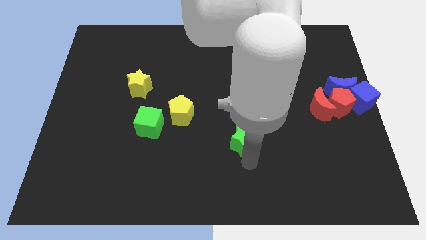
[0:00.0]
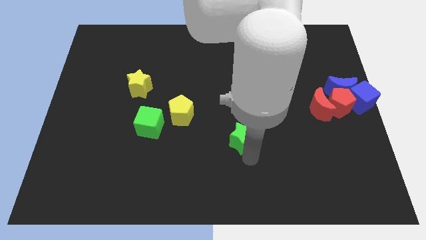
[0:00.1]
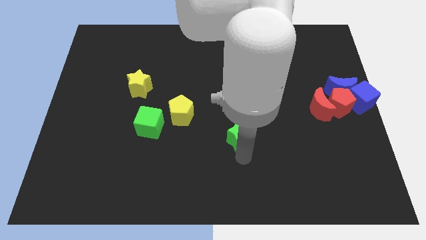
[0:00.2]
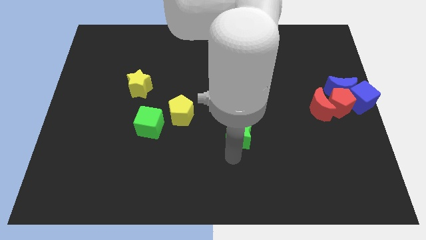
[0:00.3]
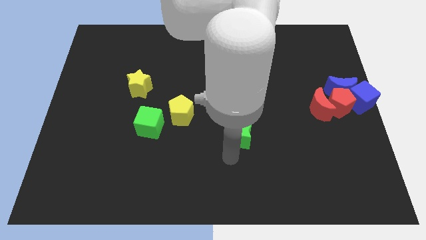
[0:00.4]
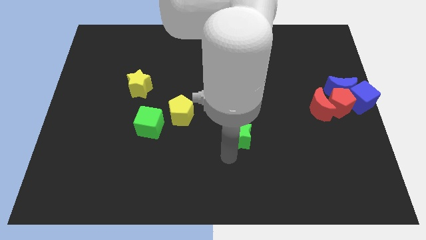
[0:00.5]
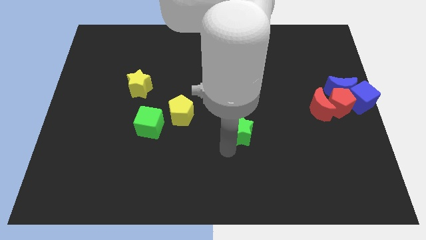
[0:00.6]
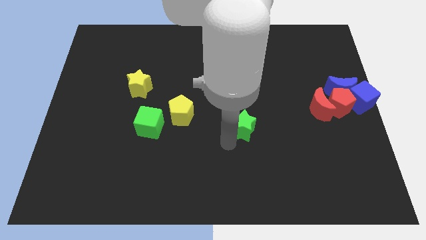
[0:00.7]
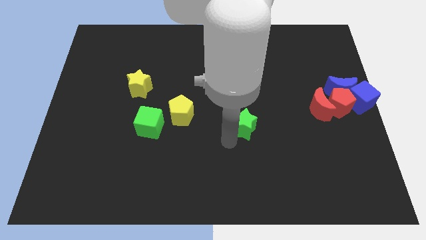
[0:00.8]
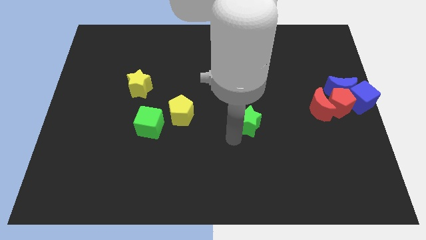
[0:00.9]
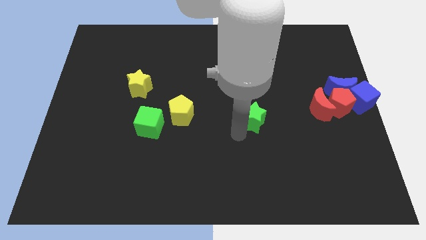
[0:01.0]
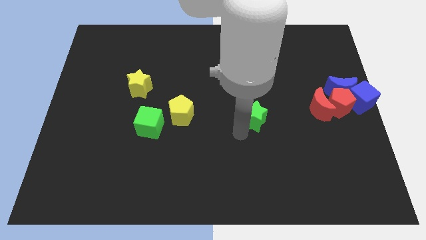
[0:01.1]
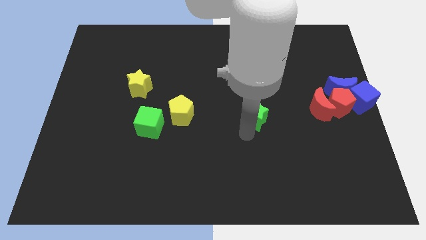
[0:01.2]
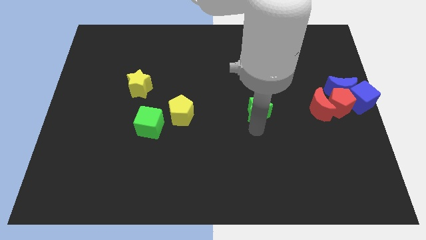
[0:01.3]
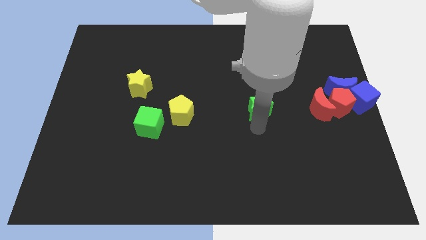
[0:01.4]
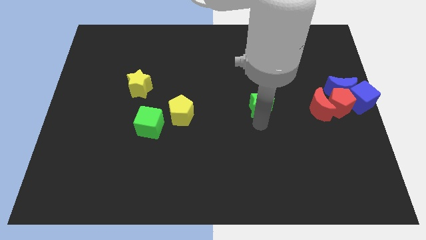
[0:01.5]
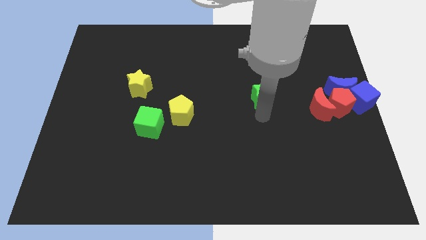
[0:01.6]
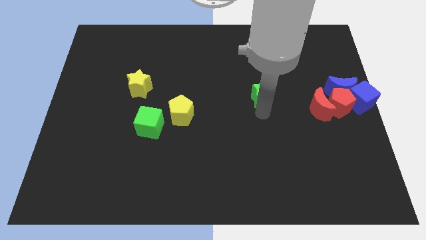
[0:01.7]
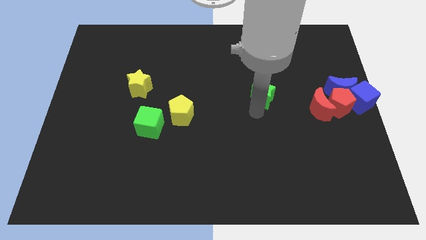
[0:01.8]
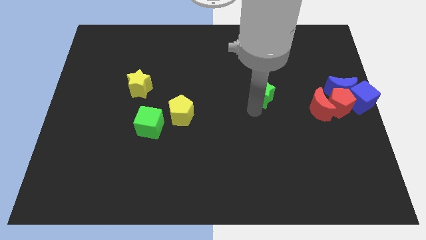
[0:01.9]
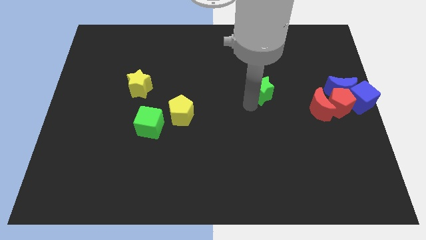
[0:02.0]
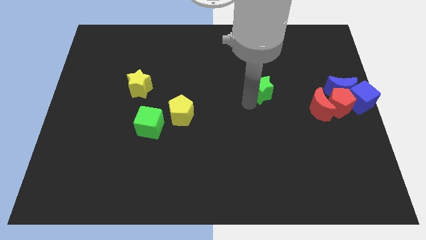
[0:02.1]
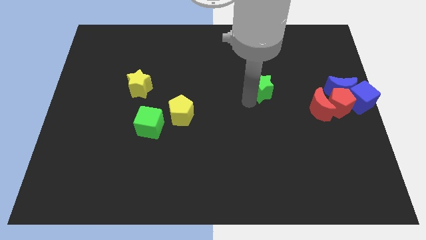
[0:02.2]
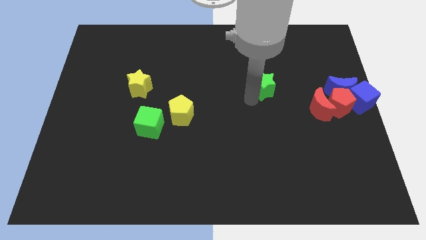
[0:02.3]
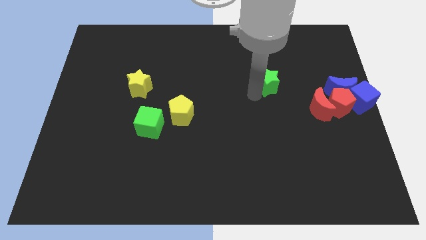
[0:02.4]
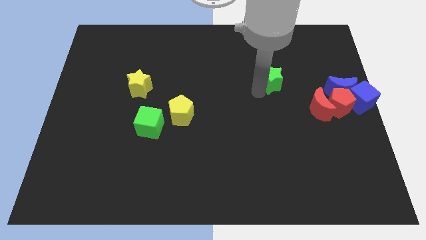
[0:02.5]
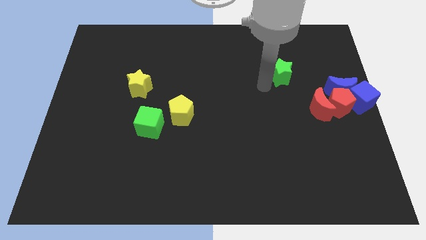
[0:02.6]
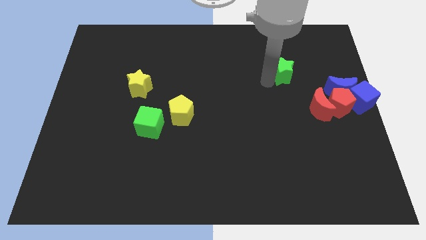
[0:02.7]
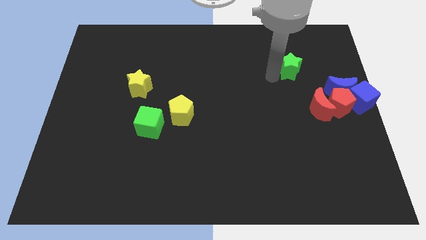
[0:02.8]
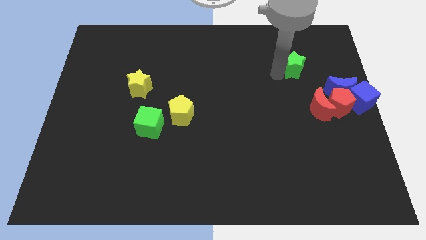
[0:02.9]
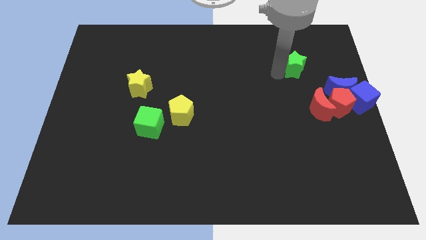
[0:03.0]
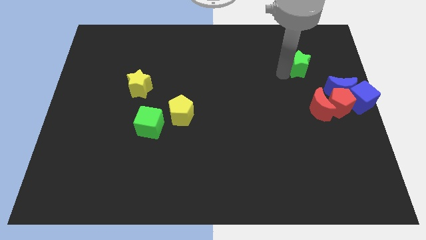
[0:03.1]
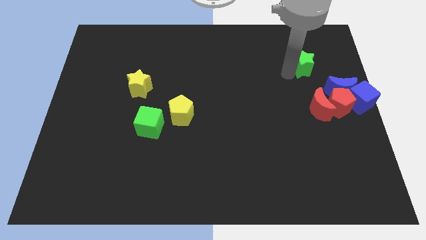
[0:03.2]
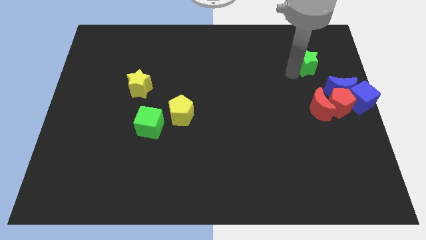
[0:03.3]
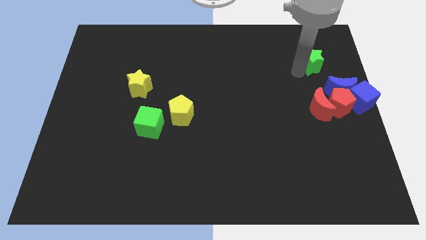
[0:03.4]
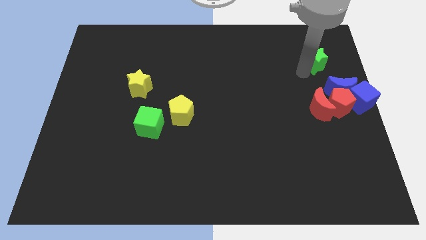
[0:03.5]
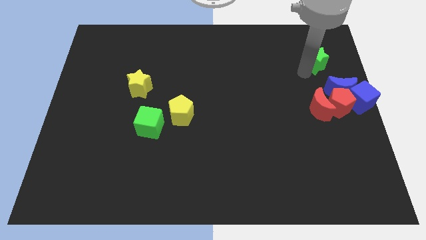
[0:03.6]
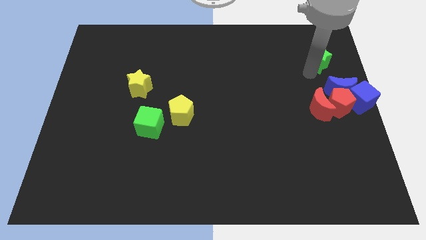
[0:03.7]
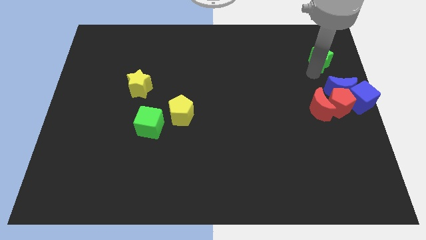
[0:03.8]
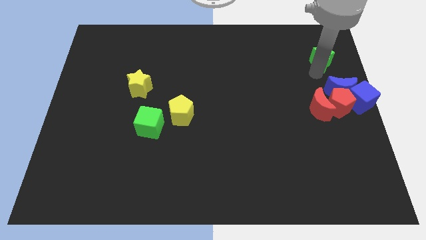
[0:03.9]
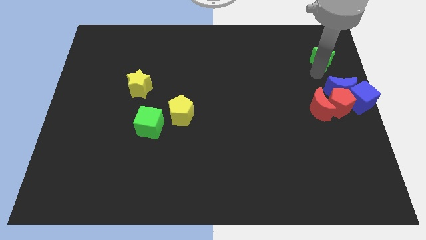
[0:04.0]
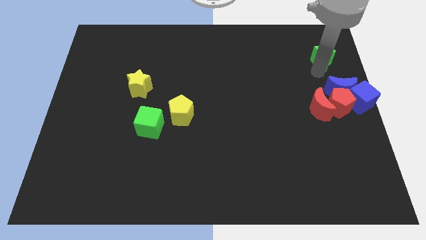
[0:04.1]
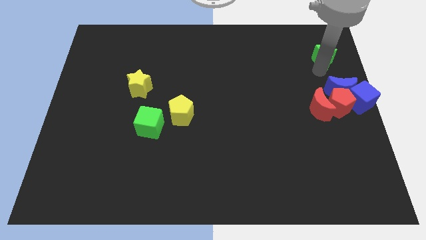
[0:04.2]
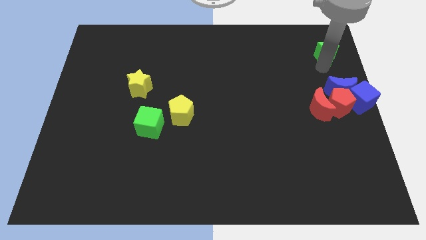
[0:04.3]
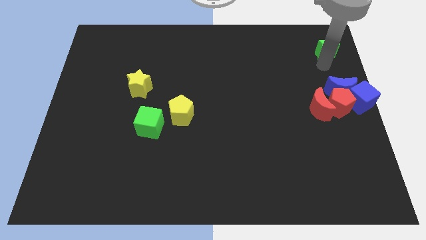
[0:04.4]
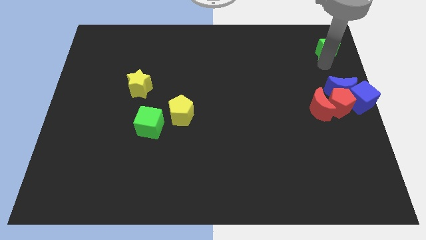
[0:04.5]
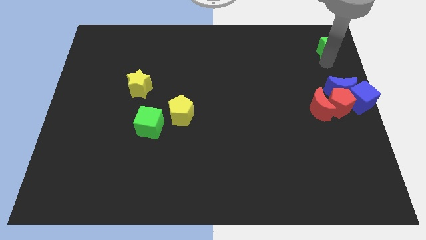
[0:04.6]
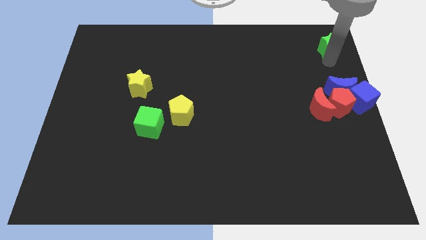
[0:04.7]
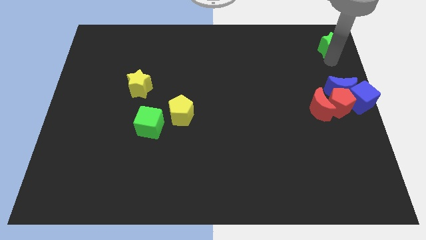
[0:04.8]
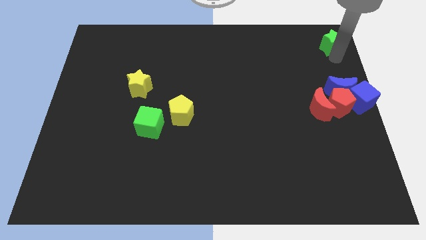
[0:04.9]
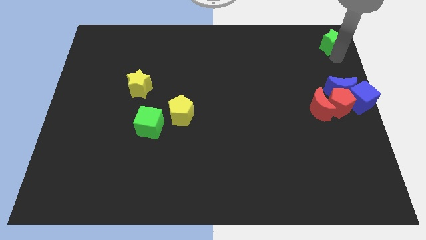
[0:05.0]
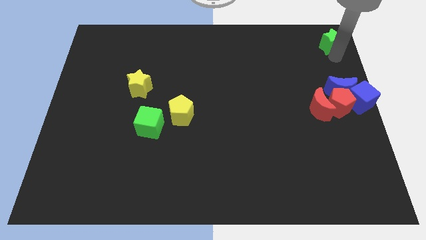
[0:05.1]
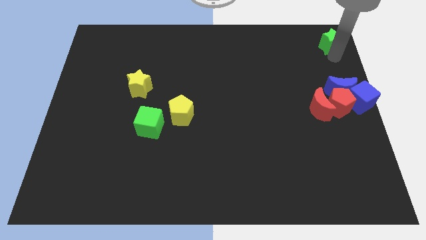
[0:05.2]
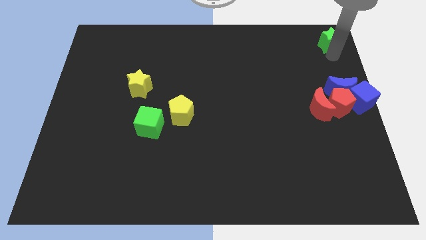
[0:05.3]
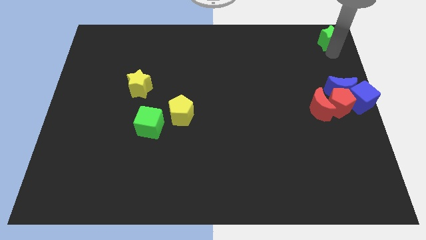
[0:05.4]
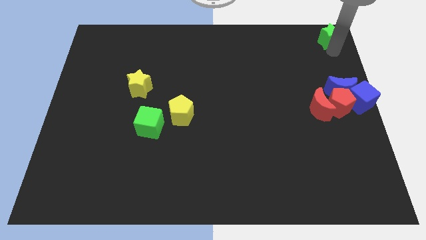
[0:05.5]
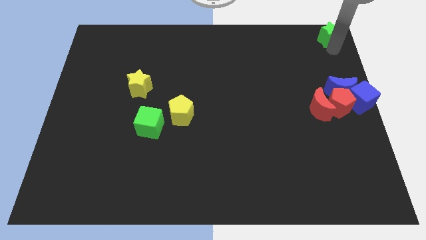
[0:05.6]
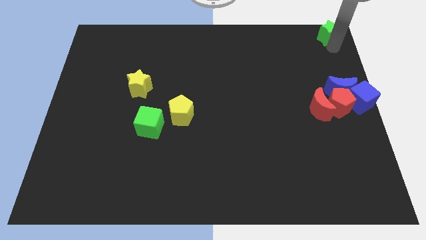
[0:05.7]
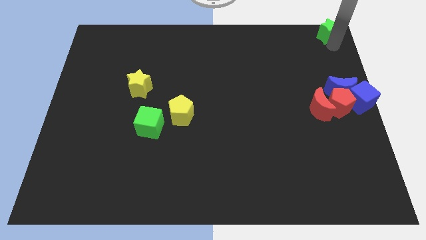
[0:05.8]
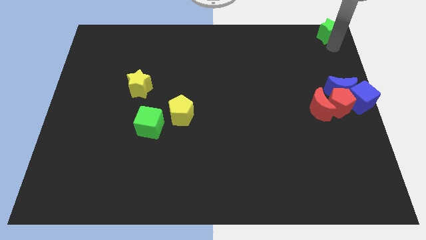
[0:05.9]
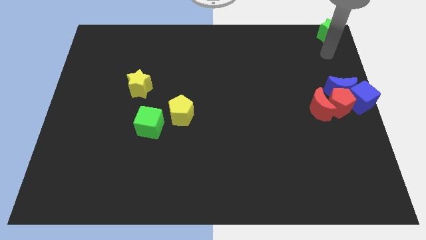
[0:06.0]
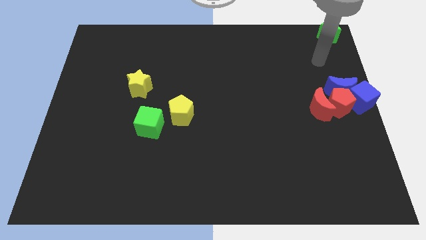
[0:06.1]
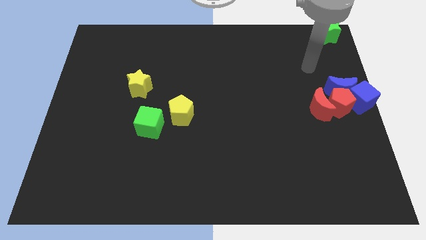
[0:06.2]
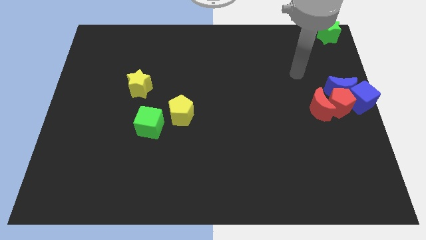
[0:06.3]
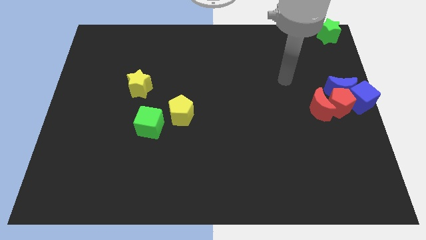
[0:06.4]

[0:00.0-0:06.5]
move the green star to the top right of the board

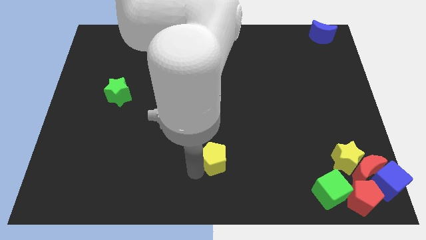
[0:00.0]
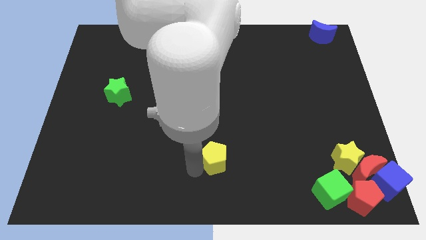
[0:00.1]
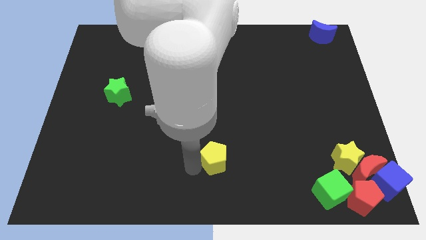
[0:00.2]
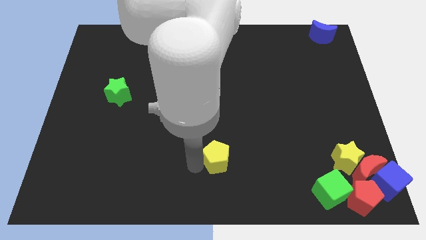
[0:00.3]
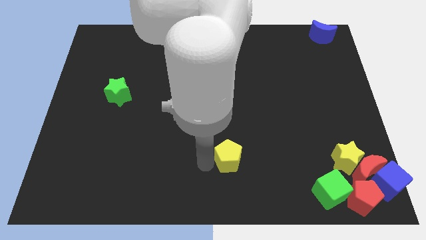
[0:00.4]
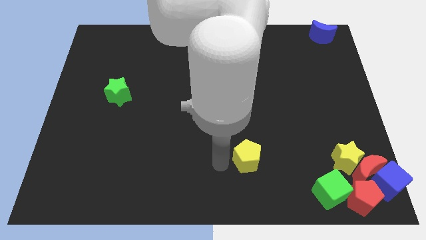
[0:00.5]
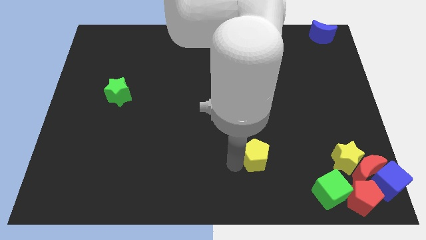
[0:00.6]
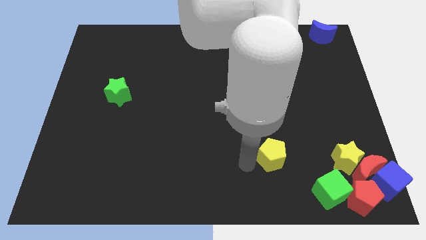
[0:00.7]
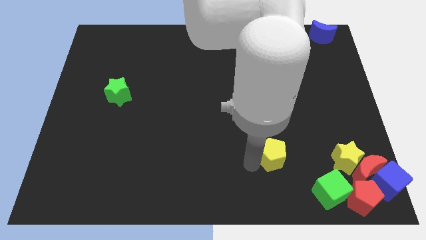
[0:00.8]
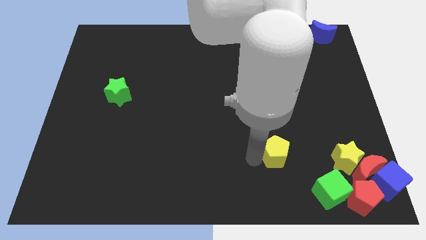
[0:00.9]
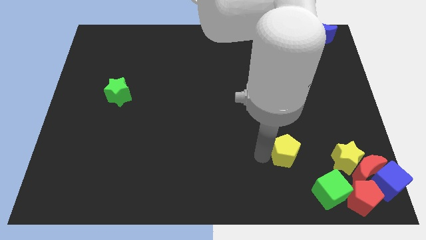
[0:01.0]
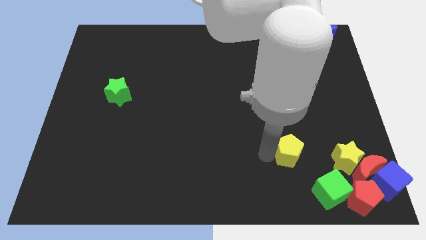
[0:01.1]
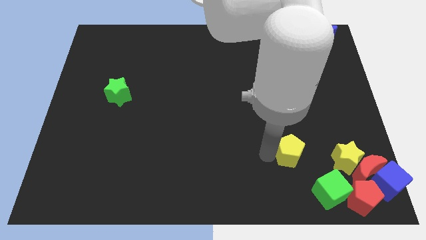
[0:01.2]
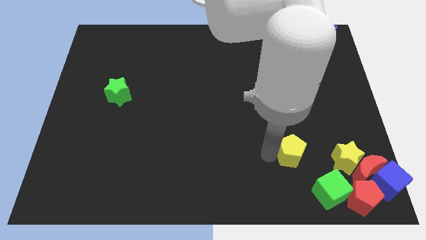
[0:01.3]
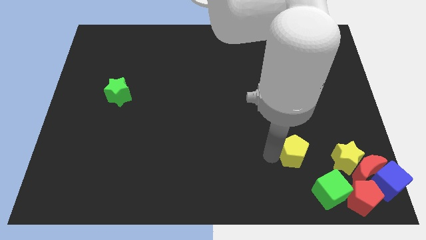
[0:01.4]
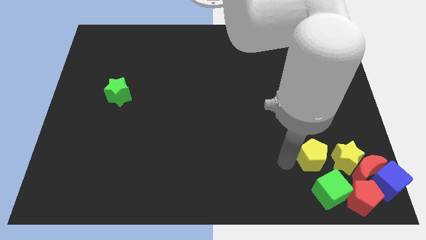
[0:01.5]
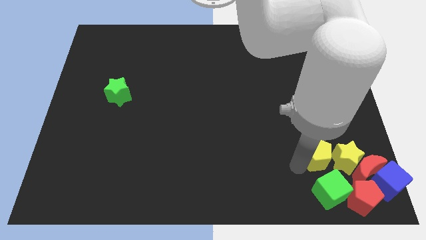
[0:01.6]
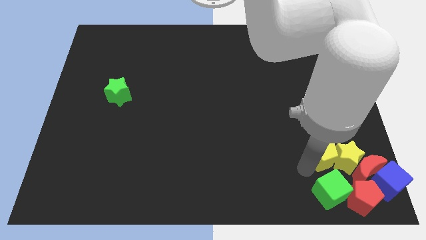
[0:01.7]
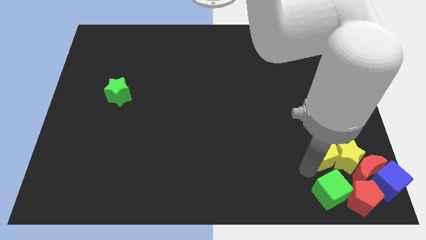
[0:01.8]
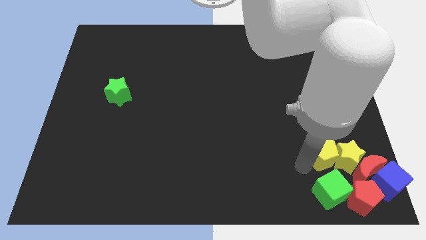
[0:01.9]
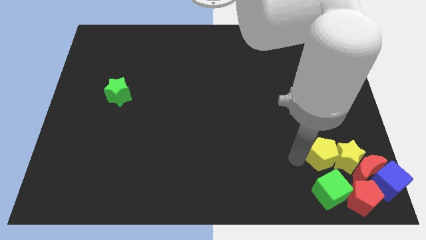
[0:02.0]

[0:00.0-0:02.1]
move the yellow pentagon into the yellow star

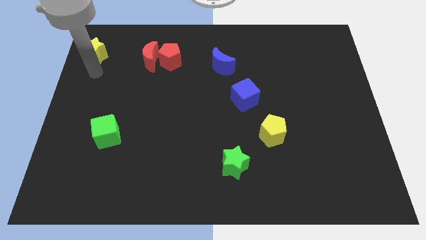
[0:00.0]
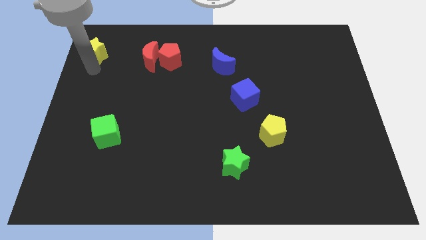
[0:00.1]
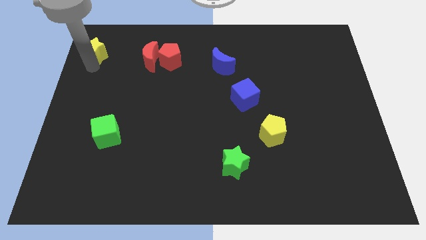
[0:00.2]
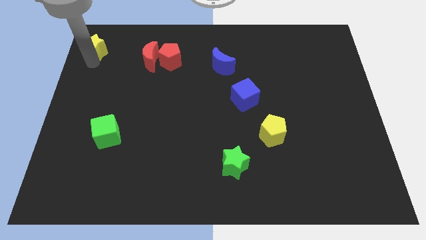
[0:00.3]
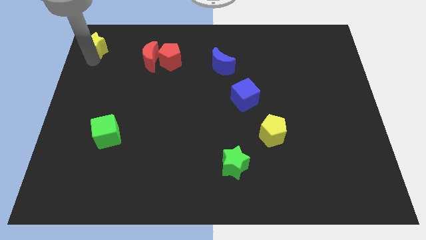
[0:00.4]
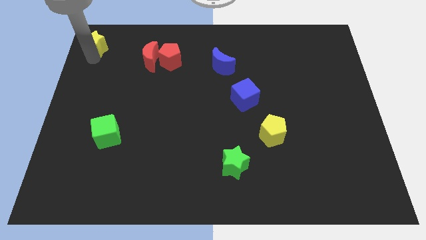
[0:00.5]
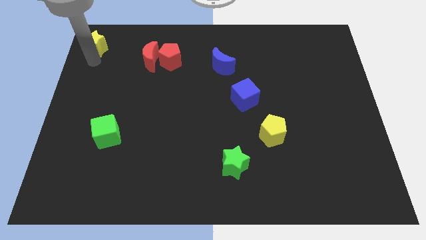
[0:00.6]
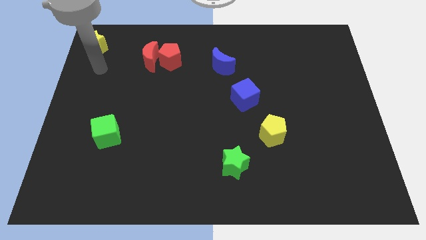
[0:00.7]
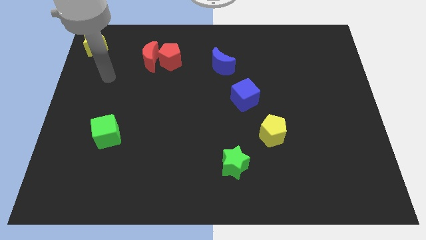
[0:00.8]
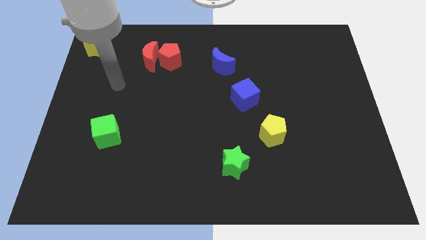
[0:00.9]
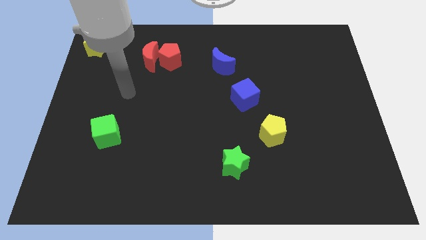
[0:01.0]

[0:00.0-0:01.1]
put the yellow star at the top left corner of the board
